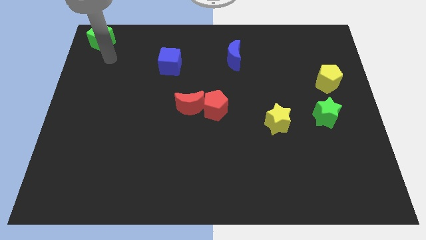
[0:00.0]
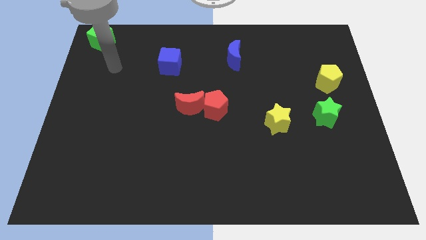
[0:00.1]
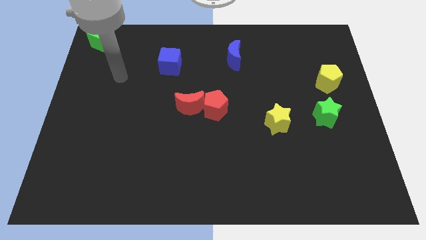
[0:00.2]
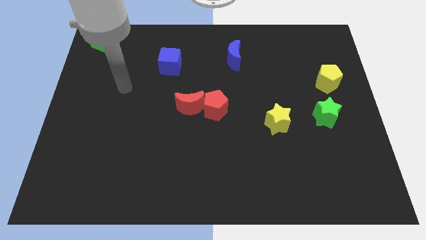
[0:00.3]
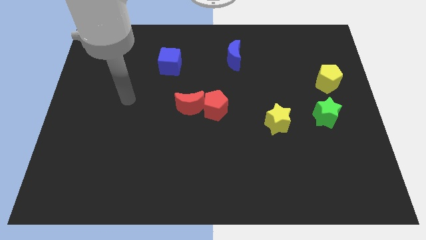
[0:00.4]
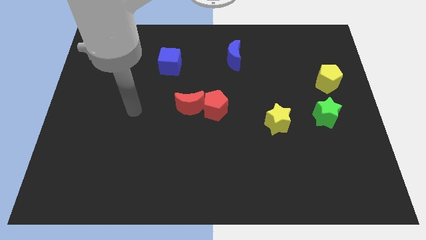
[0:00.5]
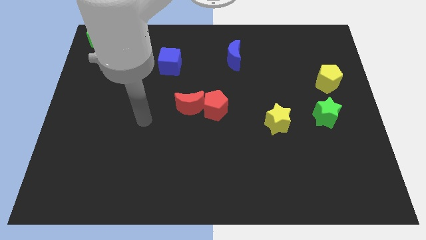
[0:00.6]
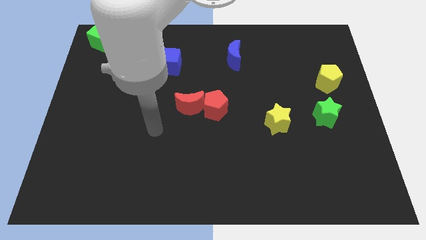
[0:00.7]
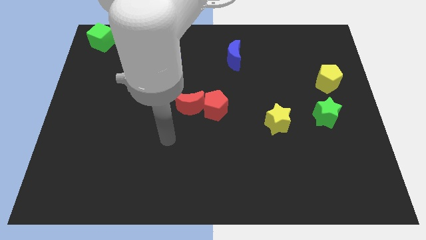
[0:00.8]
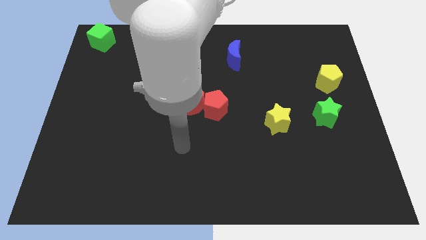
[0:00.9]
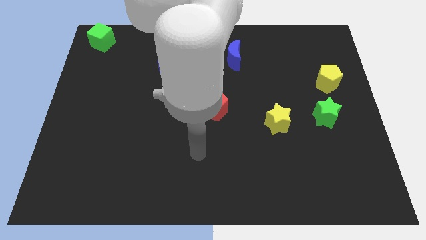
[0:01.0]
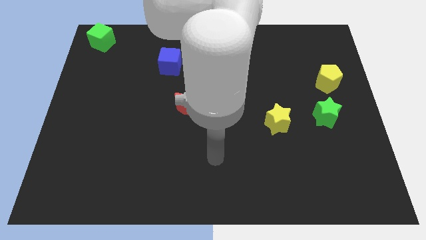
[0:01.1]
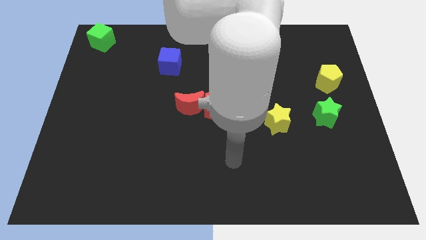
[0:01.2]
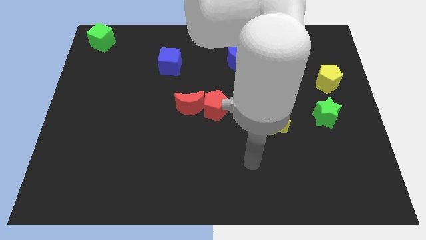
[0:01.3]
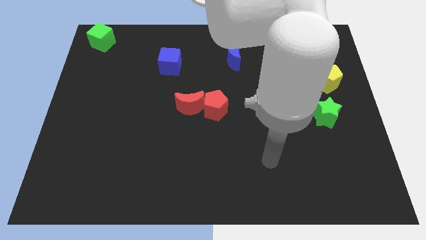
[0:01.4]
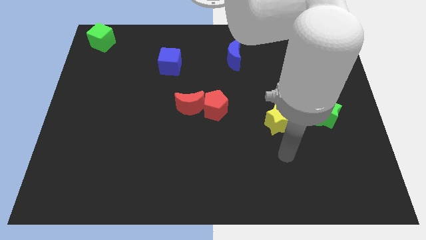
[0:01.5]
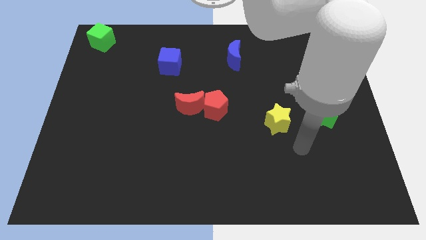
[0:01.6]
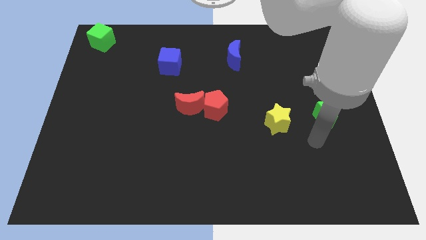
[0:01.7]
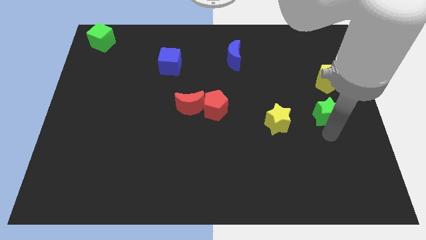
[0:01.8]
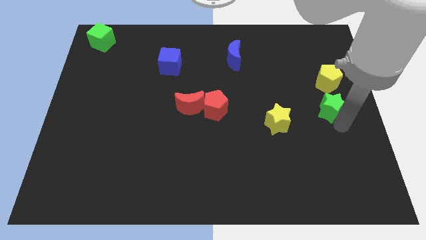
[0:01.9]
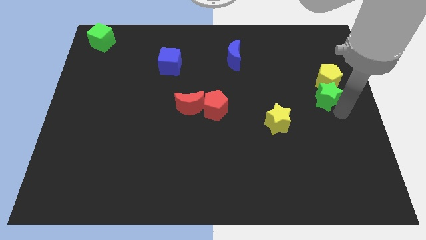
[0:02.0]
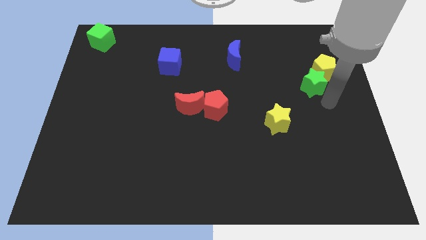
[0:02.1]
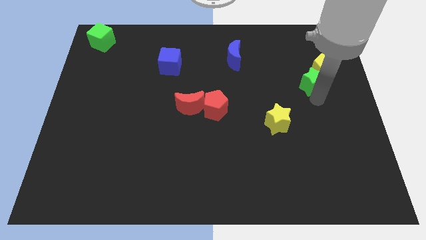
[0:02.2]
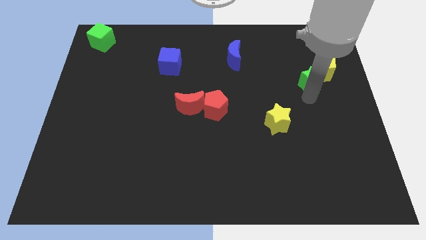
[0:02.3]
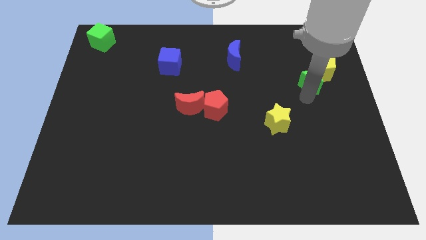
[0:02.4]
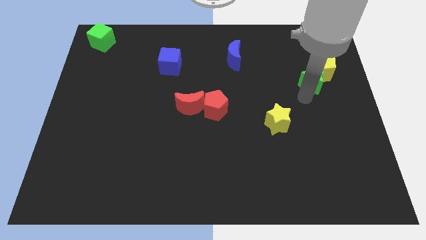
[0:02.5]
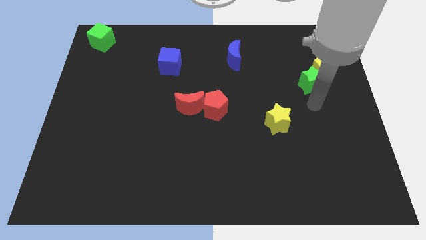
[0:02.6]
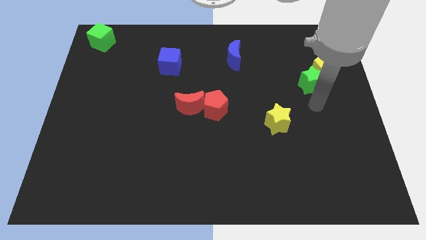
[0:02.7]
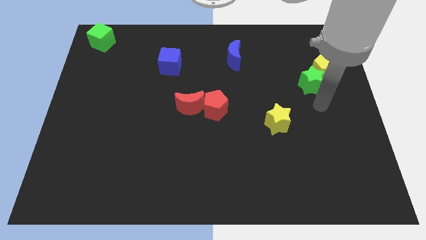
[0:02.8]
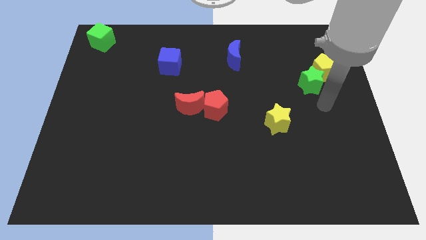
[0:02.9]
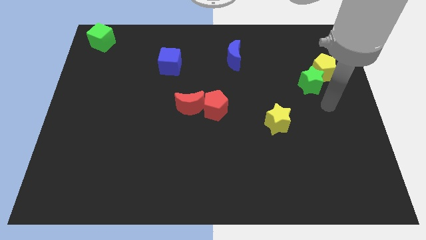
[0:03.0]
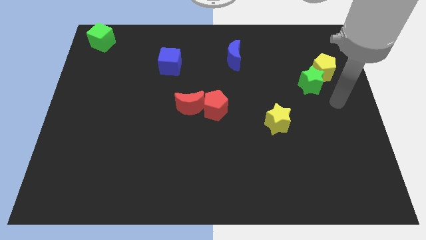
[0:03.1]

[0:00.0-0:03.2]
go and push the green star into the yellow pentagon

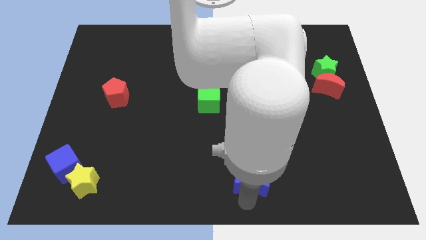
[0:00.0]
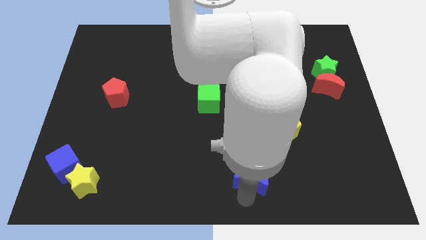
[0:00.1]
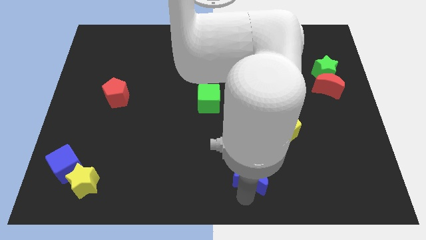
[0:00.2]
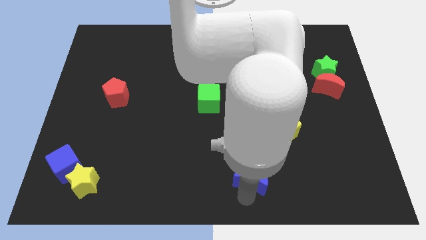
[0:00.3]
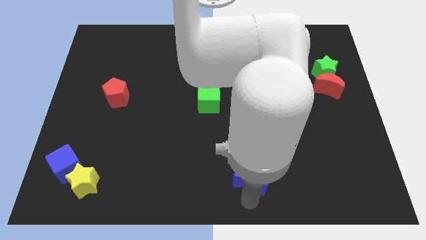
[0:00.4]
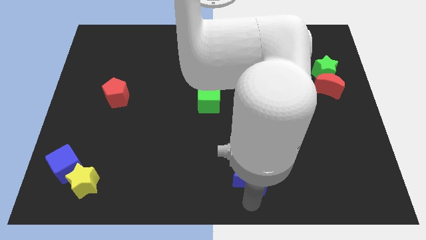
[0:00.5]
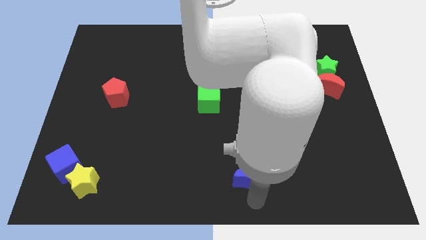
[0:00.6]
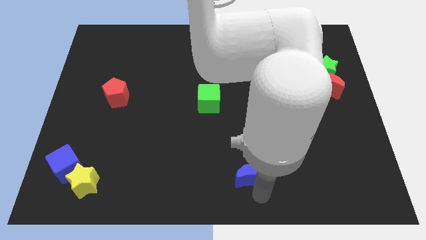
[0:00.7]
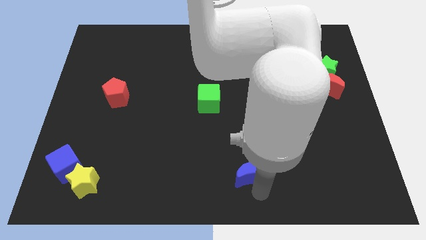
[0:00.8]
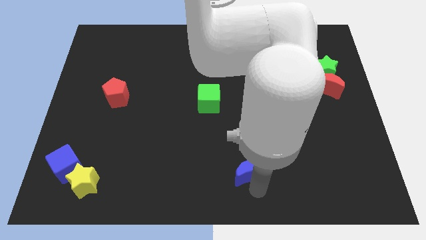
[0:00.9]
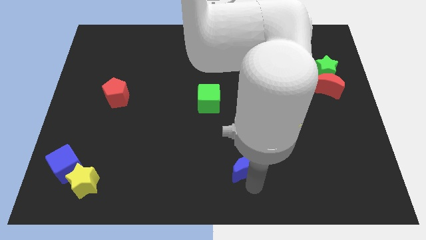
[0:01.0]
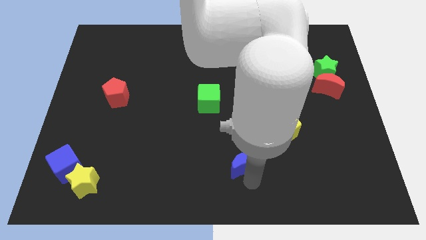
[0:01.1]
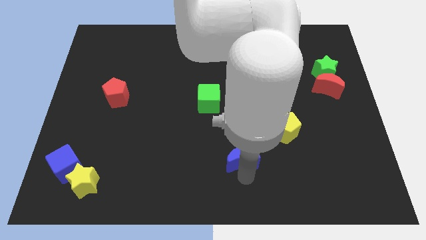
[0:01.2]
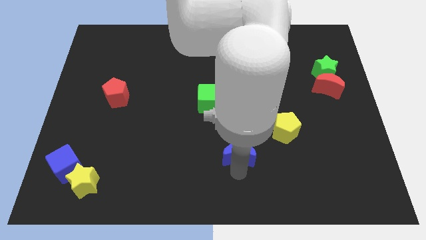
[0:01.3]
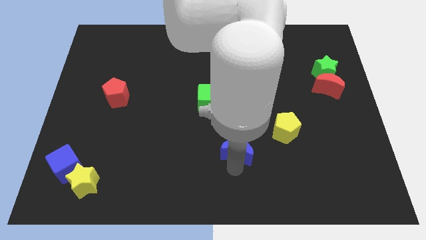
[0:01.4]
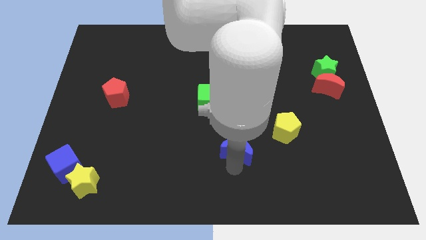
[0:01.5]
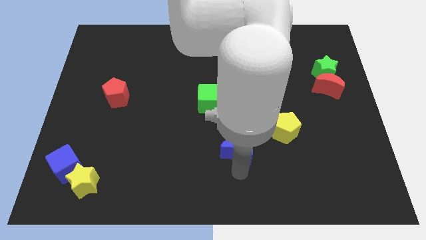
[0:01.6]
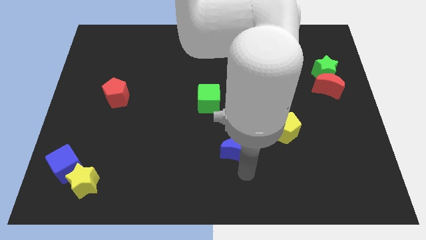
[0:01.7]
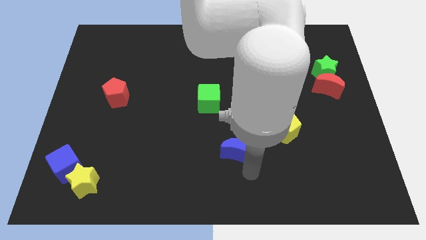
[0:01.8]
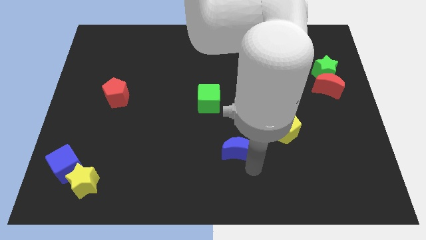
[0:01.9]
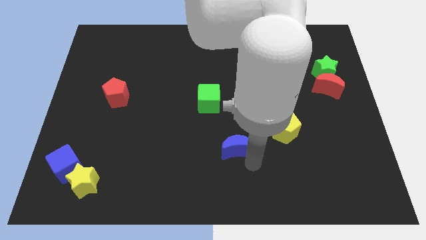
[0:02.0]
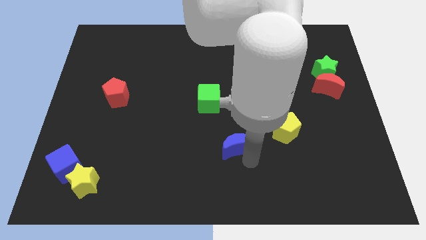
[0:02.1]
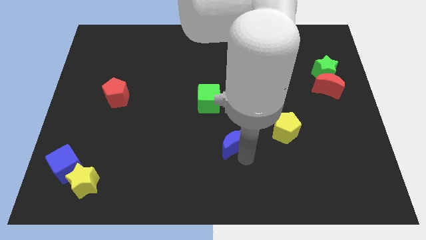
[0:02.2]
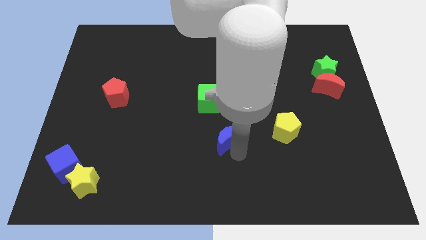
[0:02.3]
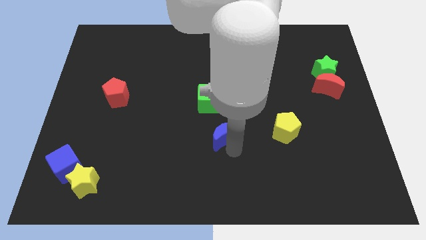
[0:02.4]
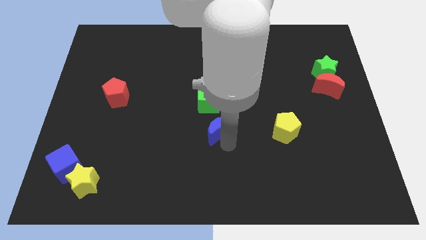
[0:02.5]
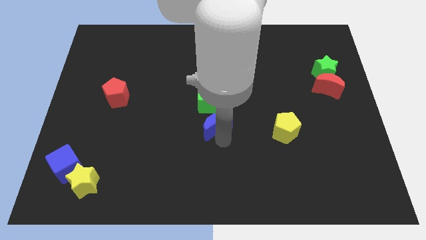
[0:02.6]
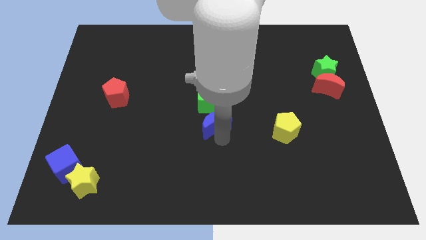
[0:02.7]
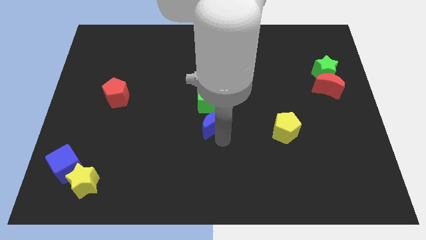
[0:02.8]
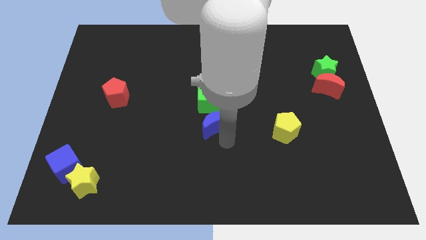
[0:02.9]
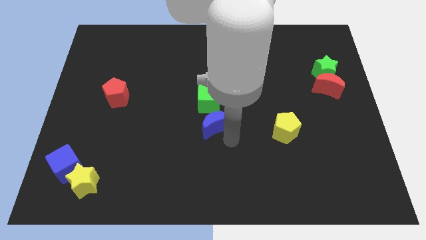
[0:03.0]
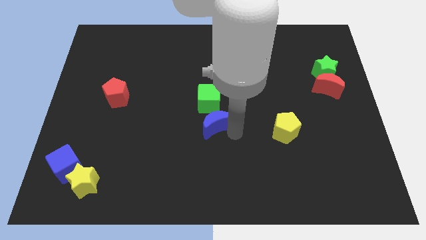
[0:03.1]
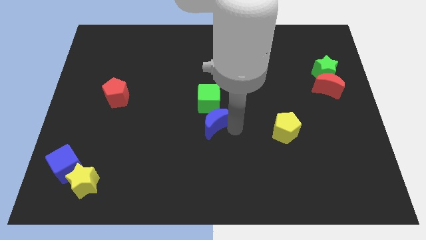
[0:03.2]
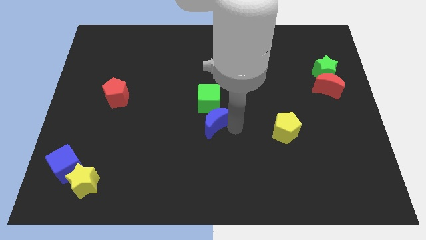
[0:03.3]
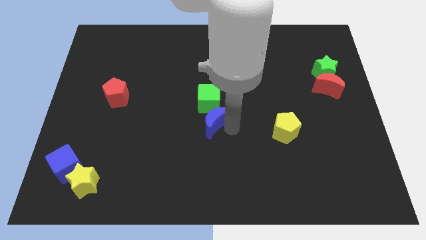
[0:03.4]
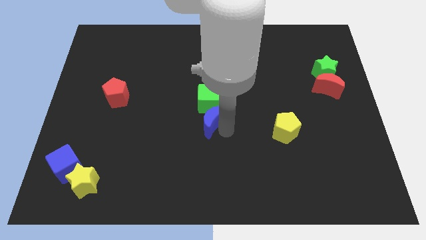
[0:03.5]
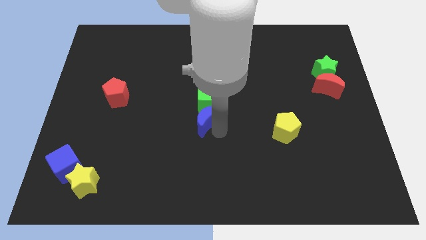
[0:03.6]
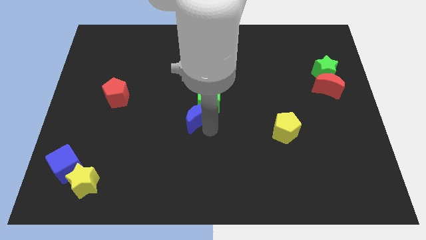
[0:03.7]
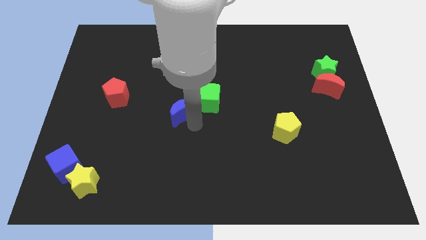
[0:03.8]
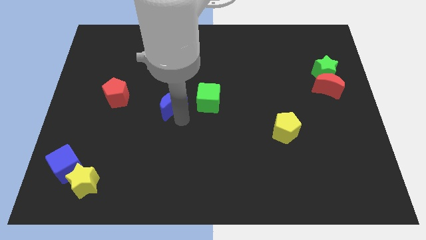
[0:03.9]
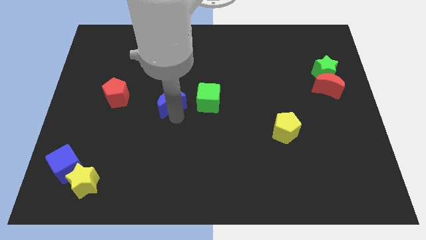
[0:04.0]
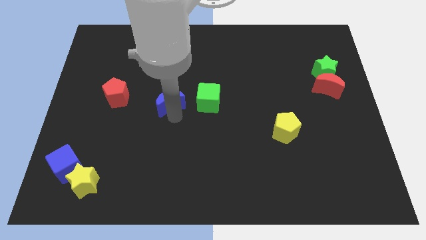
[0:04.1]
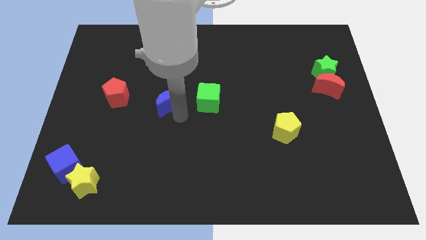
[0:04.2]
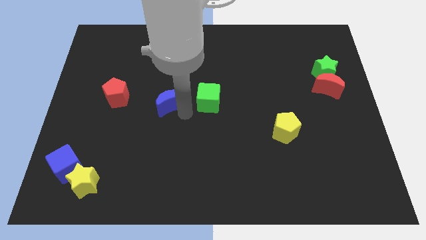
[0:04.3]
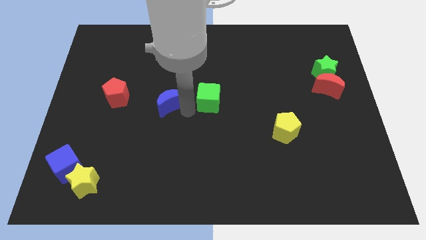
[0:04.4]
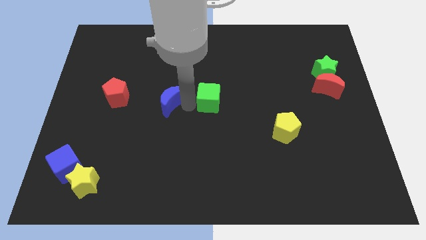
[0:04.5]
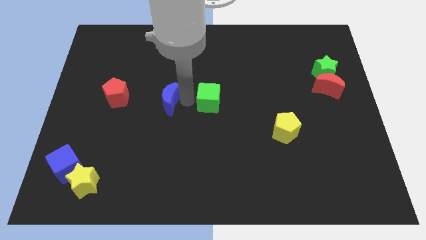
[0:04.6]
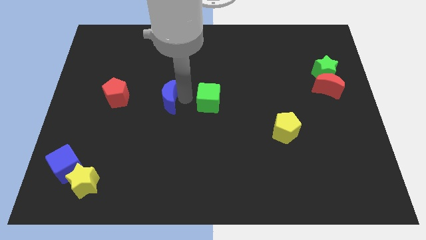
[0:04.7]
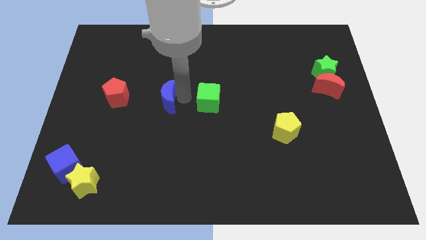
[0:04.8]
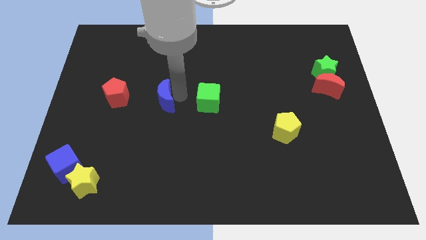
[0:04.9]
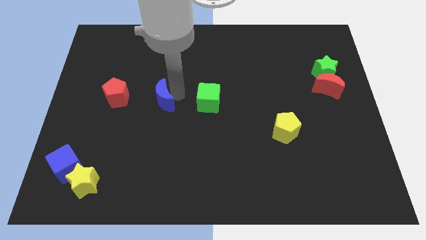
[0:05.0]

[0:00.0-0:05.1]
move the blue moon between the red pentagon and green cube

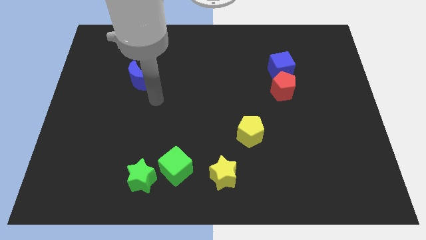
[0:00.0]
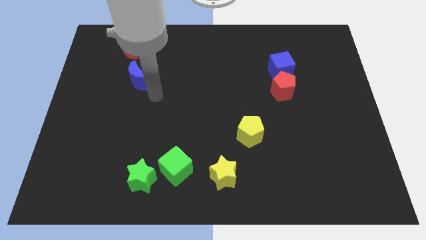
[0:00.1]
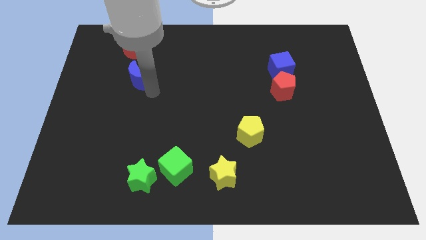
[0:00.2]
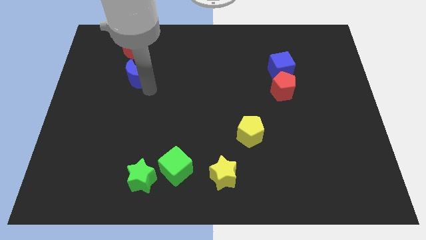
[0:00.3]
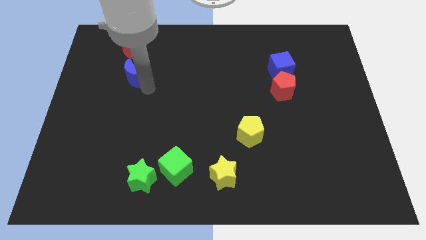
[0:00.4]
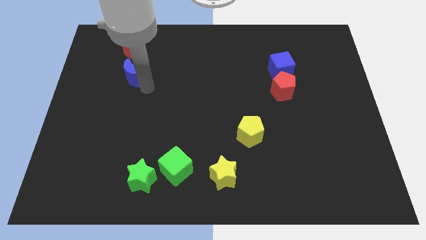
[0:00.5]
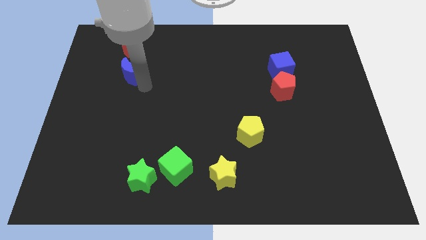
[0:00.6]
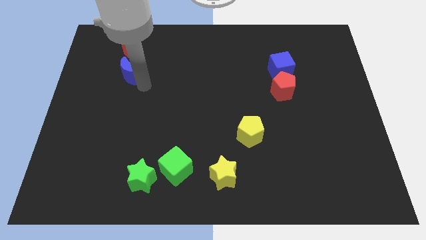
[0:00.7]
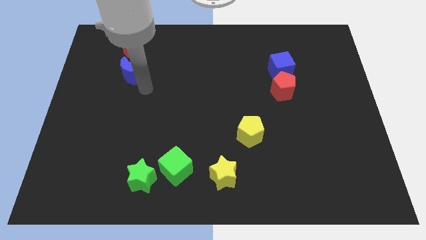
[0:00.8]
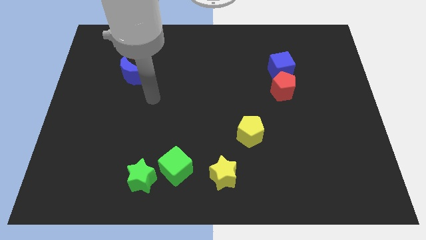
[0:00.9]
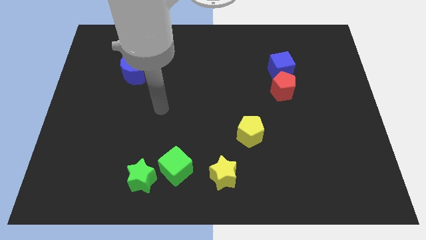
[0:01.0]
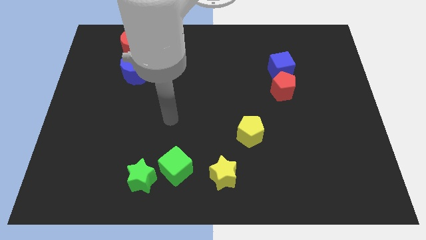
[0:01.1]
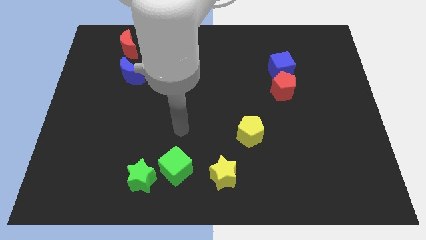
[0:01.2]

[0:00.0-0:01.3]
put the blue moon below the red moon
